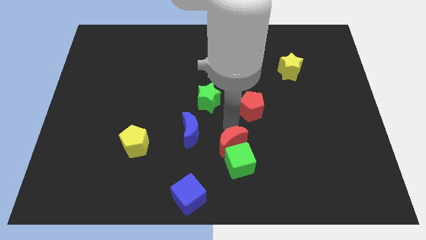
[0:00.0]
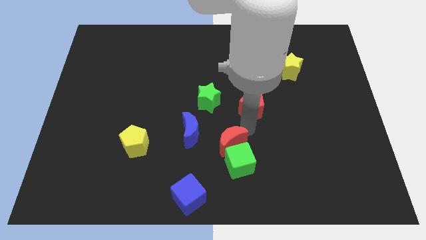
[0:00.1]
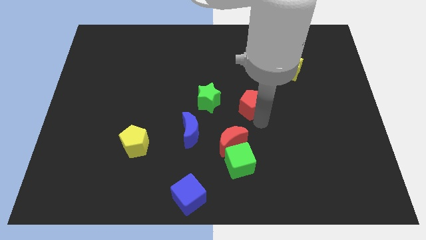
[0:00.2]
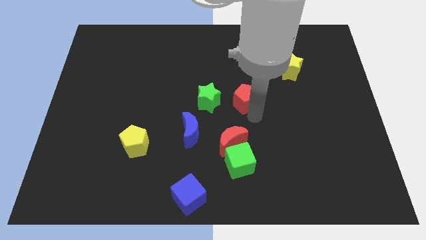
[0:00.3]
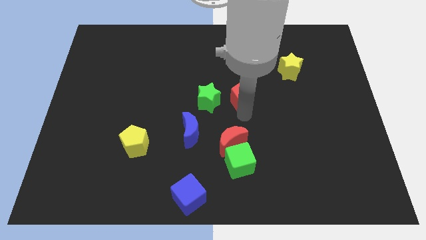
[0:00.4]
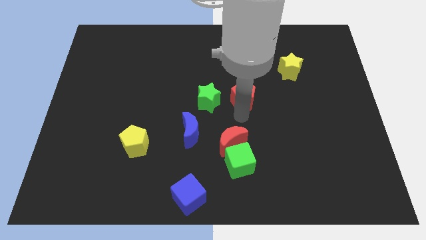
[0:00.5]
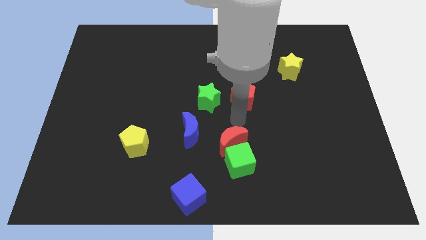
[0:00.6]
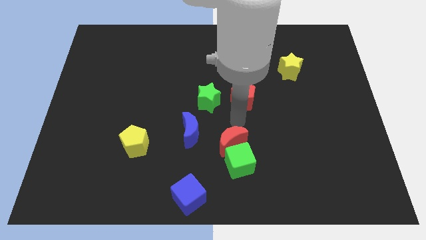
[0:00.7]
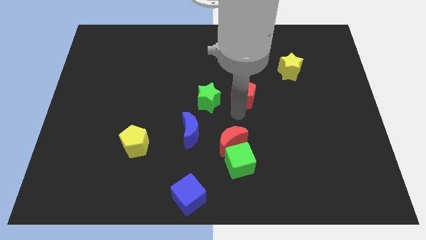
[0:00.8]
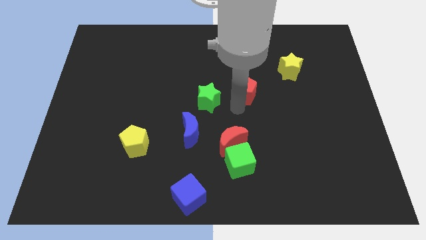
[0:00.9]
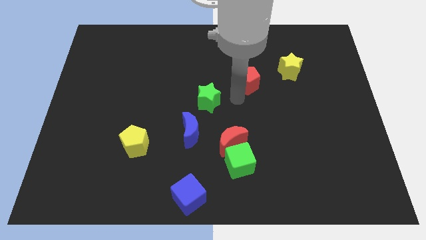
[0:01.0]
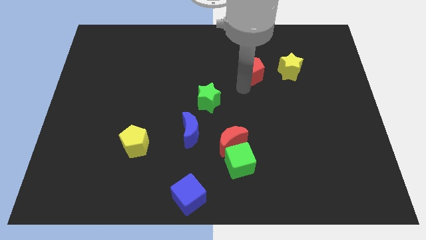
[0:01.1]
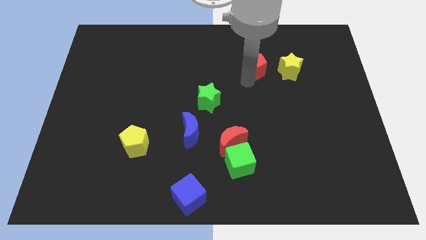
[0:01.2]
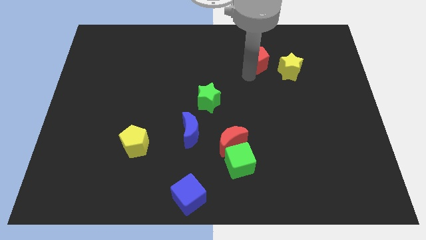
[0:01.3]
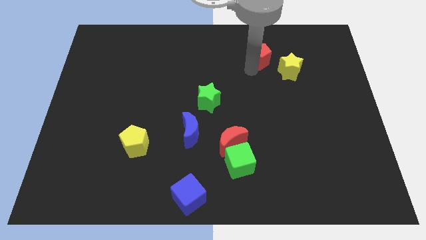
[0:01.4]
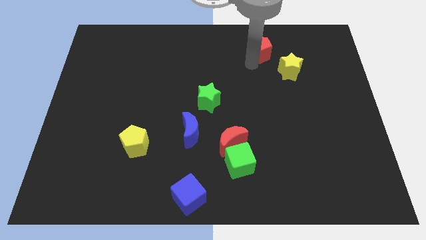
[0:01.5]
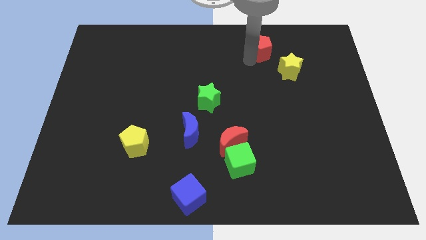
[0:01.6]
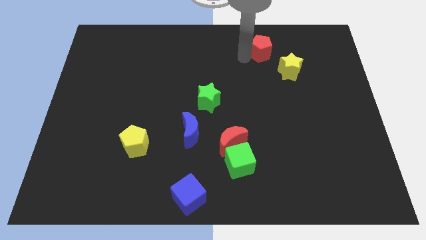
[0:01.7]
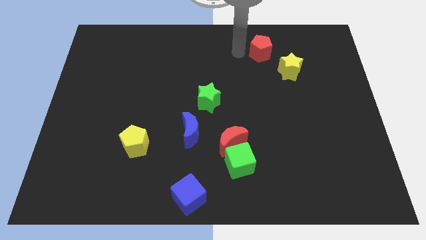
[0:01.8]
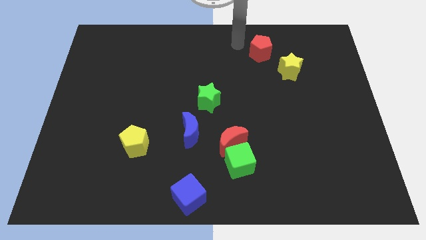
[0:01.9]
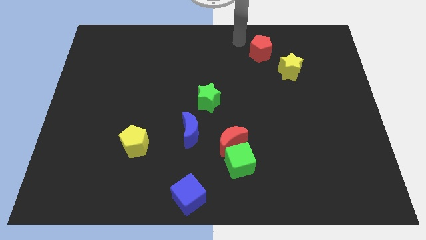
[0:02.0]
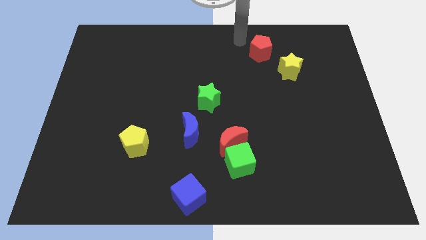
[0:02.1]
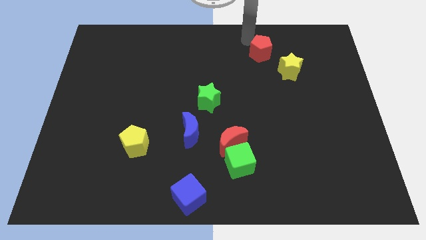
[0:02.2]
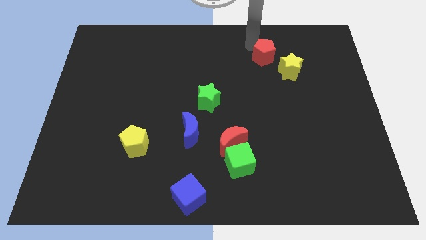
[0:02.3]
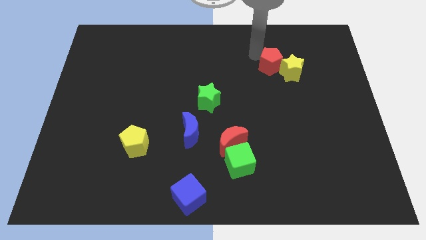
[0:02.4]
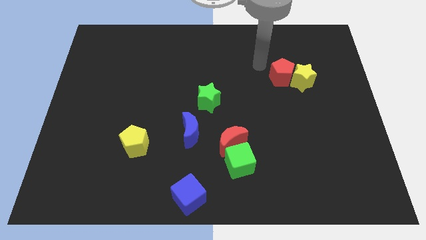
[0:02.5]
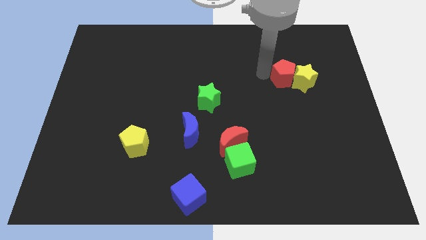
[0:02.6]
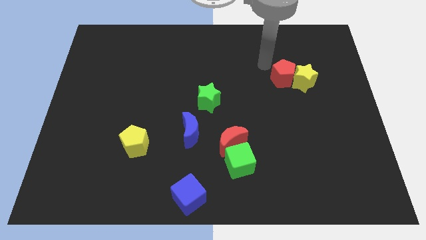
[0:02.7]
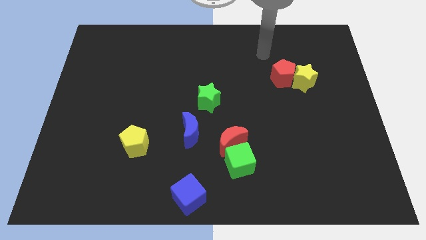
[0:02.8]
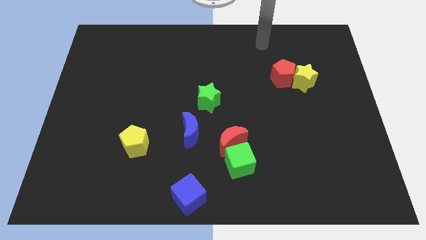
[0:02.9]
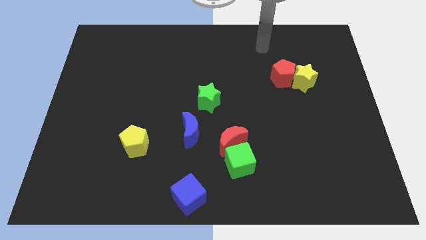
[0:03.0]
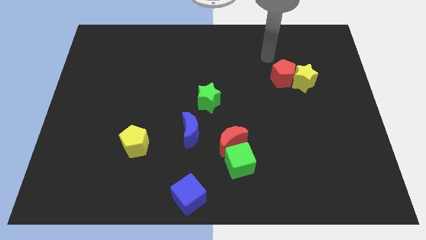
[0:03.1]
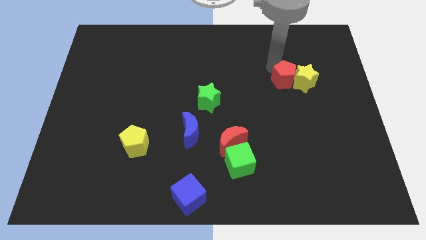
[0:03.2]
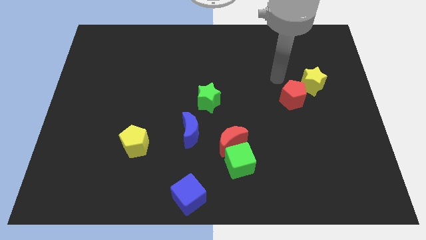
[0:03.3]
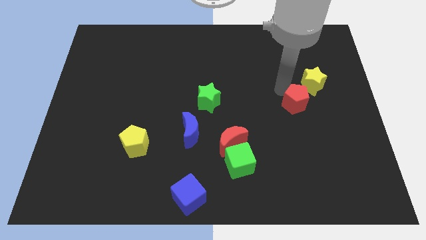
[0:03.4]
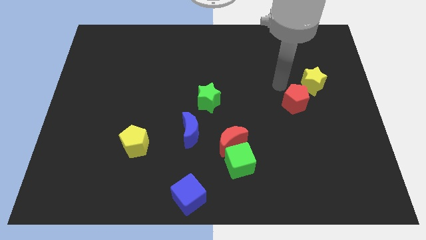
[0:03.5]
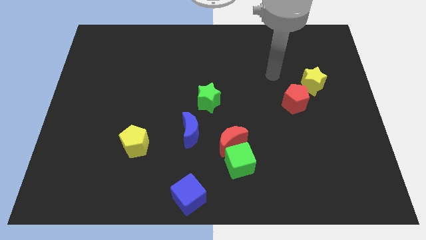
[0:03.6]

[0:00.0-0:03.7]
move the red pentagon to the bottom left of the yellow star

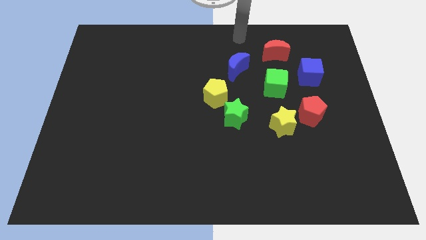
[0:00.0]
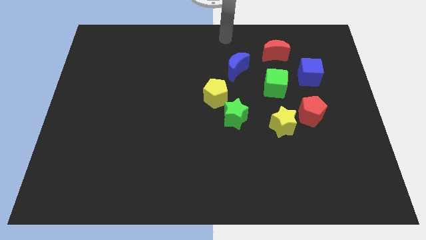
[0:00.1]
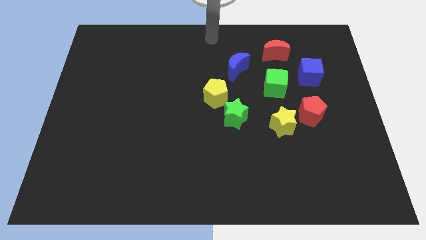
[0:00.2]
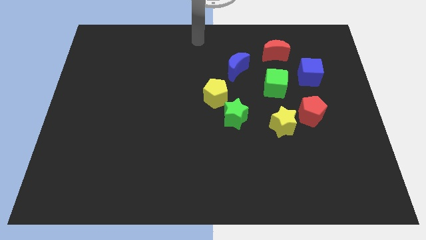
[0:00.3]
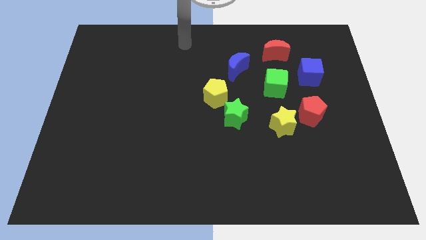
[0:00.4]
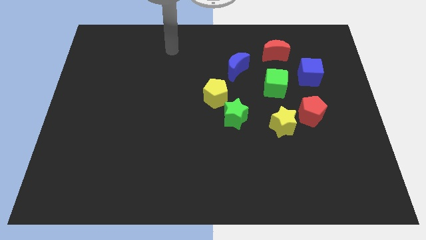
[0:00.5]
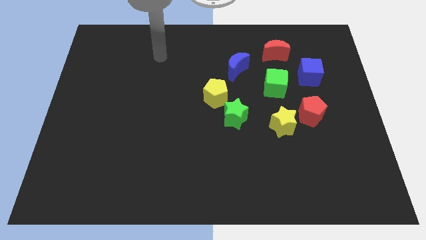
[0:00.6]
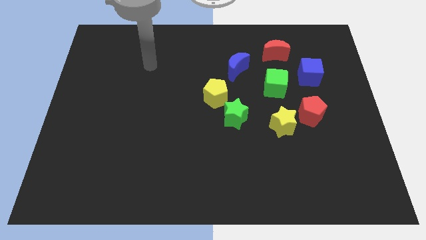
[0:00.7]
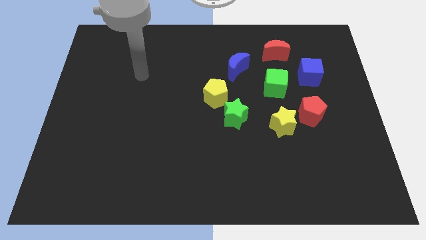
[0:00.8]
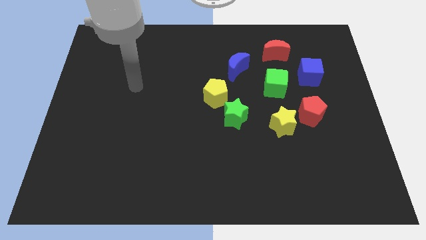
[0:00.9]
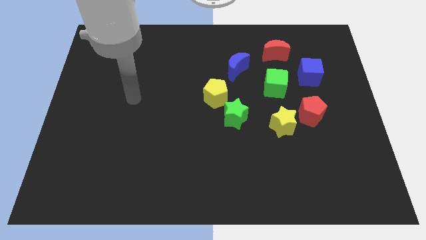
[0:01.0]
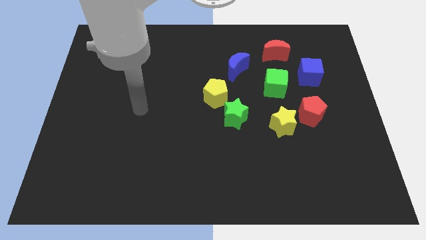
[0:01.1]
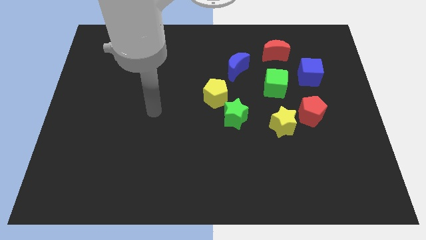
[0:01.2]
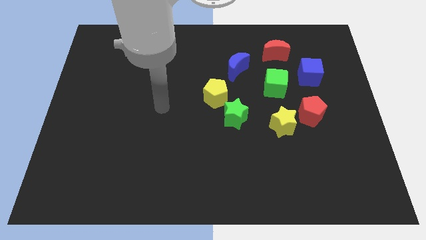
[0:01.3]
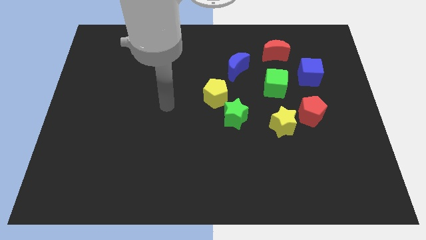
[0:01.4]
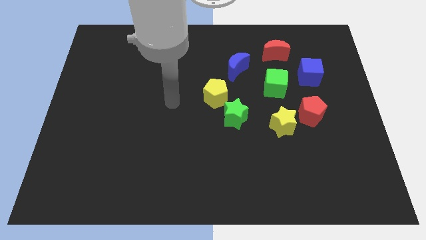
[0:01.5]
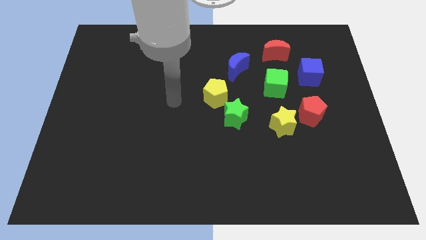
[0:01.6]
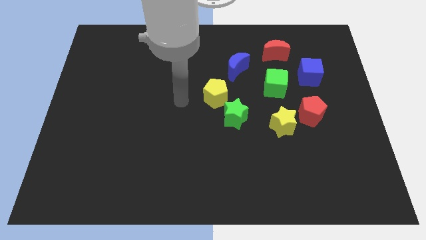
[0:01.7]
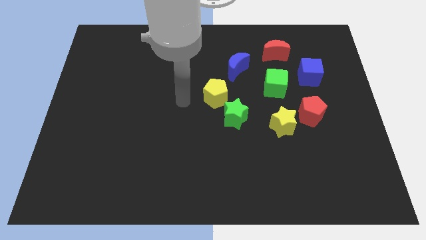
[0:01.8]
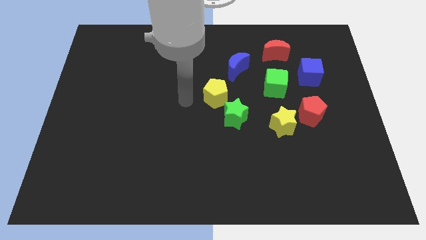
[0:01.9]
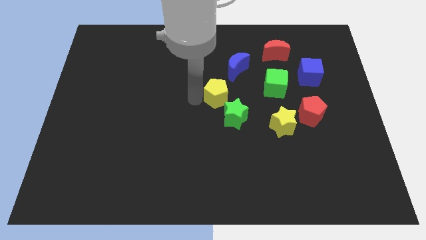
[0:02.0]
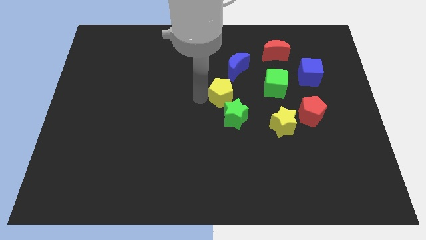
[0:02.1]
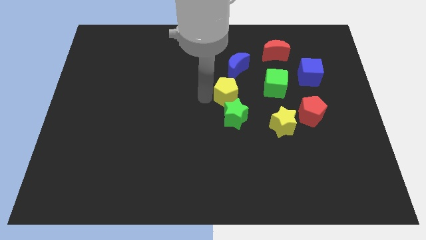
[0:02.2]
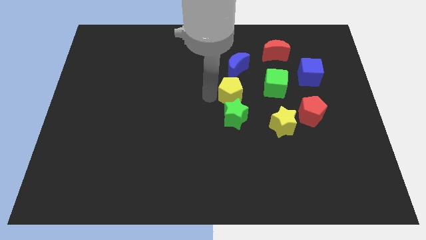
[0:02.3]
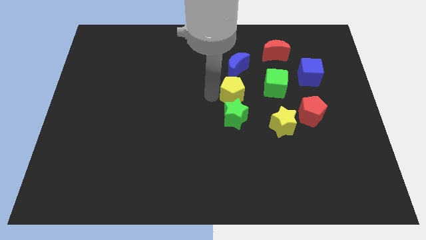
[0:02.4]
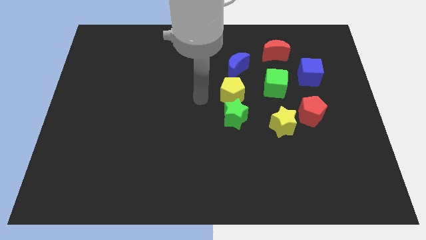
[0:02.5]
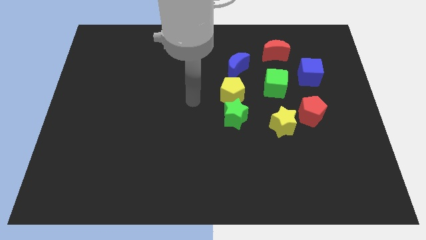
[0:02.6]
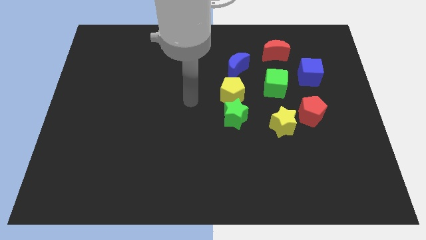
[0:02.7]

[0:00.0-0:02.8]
push the yellow pentagon above the green star

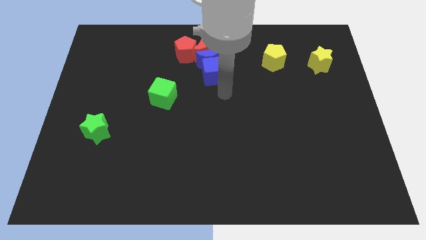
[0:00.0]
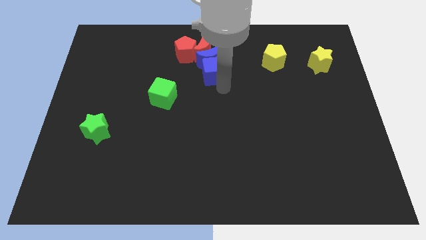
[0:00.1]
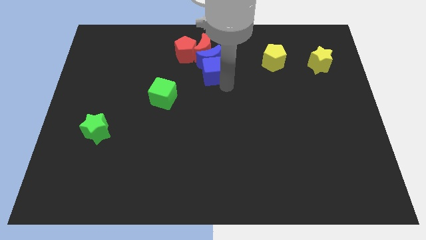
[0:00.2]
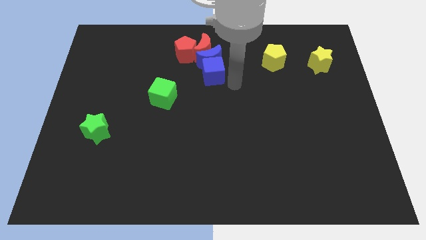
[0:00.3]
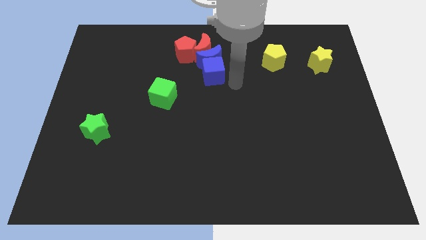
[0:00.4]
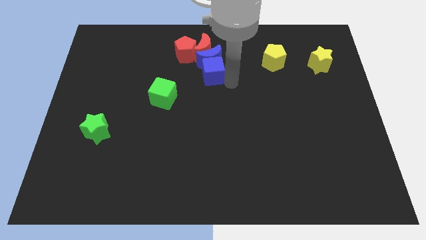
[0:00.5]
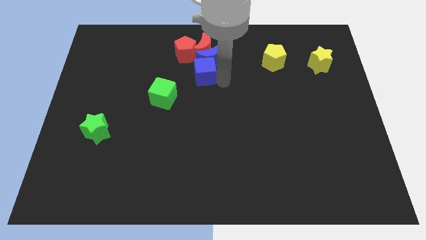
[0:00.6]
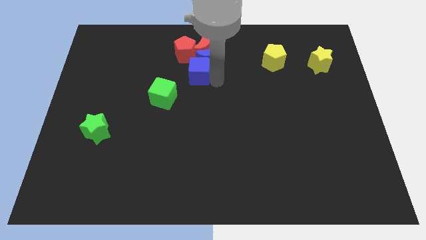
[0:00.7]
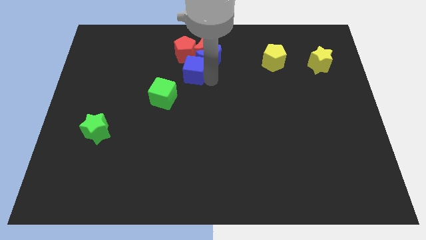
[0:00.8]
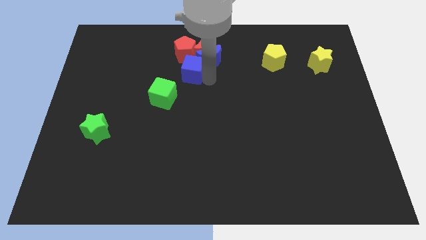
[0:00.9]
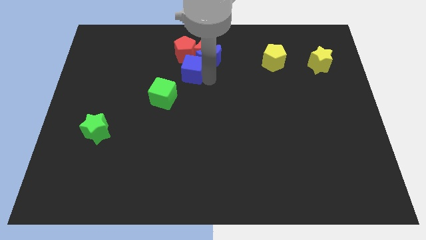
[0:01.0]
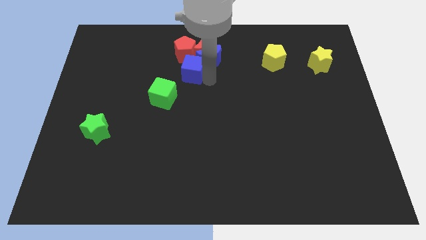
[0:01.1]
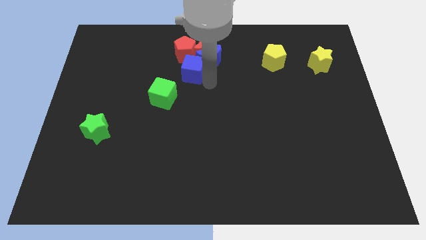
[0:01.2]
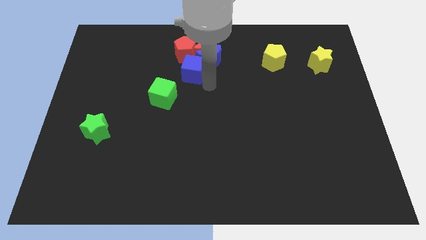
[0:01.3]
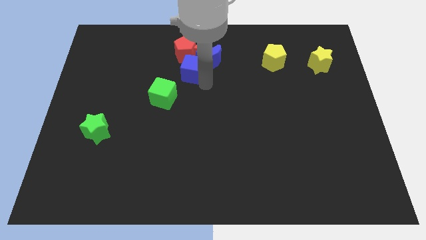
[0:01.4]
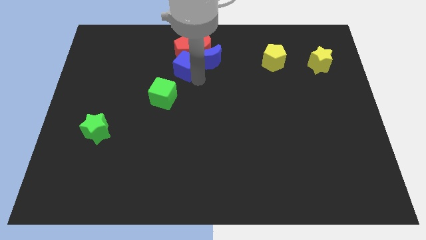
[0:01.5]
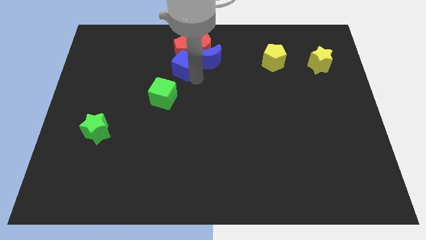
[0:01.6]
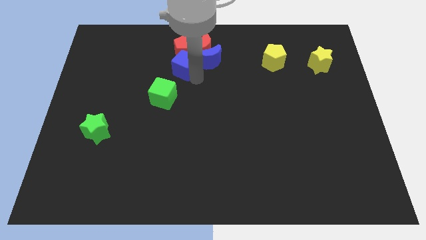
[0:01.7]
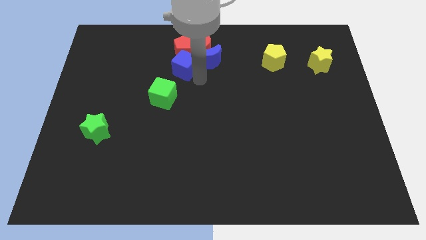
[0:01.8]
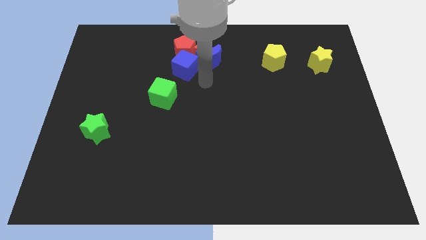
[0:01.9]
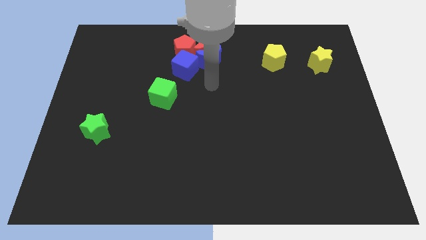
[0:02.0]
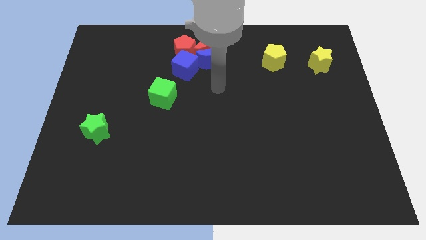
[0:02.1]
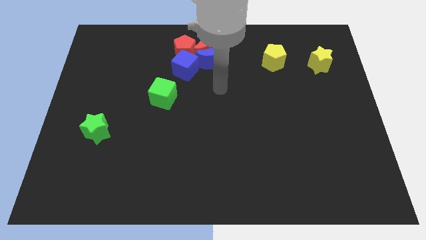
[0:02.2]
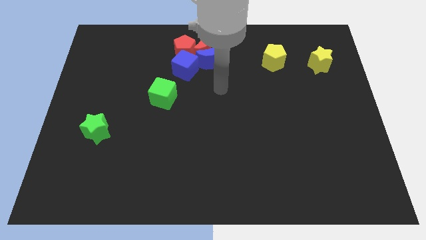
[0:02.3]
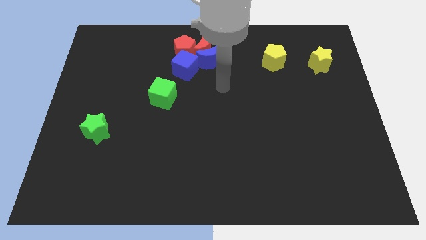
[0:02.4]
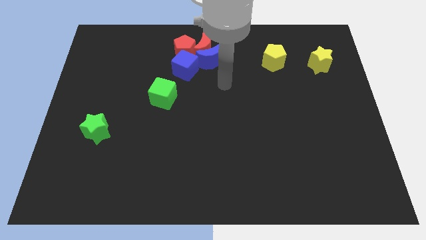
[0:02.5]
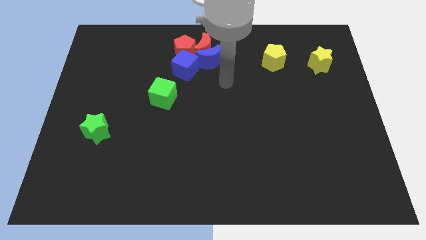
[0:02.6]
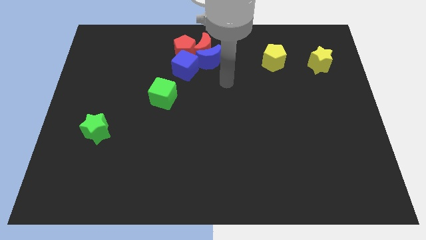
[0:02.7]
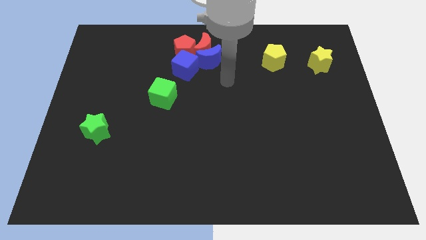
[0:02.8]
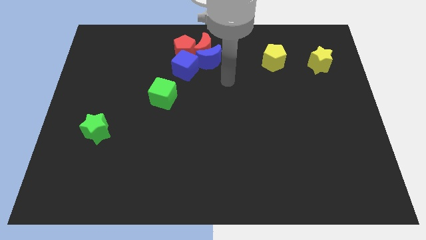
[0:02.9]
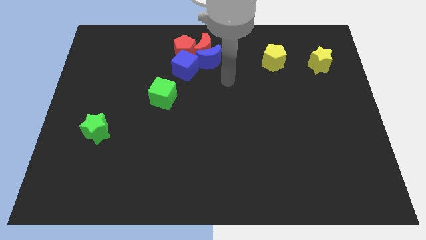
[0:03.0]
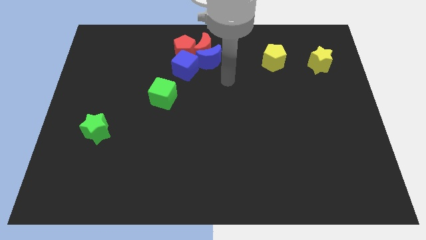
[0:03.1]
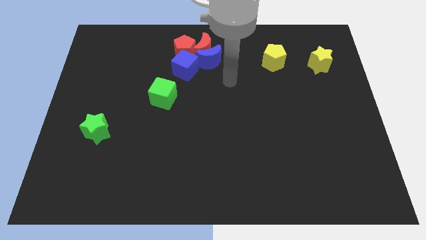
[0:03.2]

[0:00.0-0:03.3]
move the blue cube into the bottom of the red pentagon
